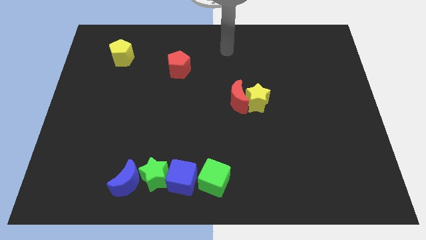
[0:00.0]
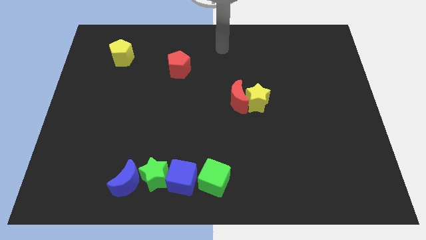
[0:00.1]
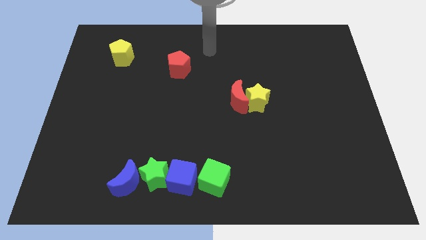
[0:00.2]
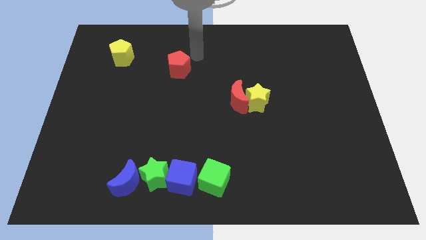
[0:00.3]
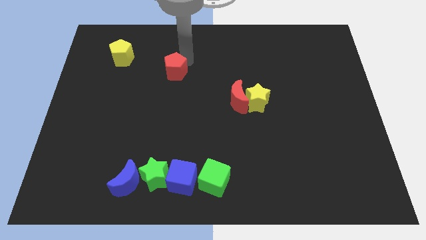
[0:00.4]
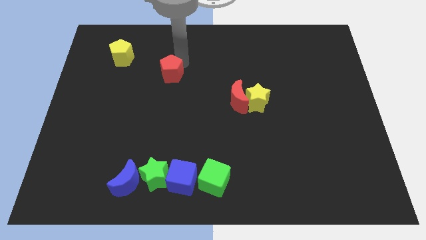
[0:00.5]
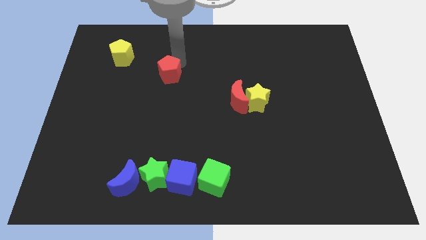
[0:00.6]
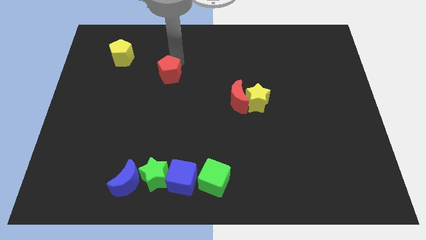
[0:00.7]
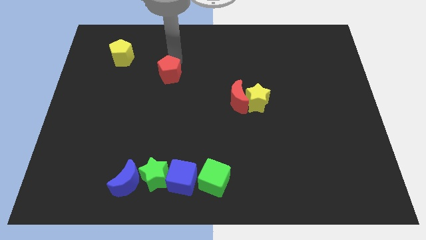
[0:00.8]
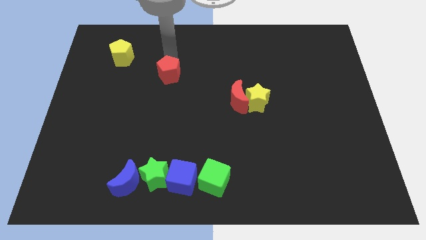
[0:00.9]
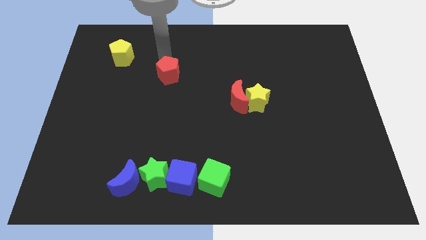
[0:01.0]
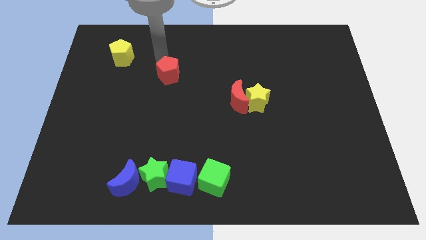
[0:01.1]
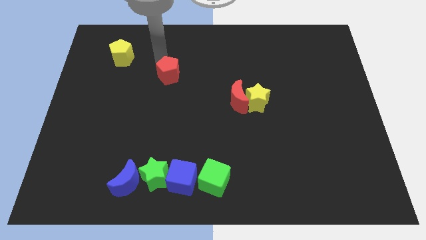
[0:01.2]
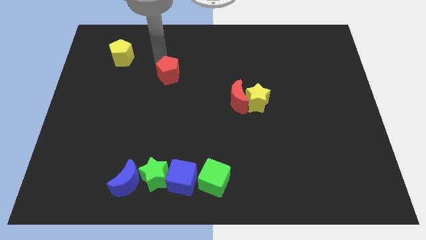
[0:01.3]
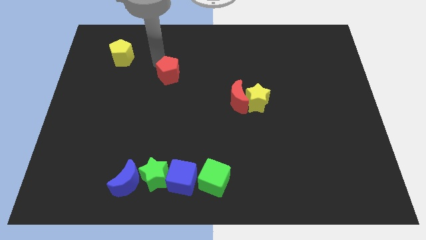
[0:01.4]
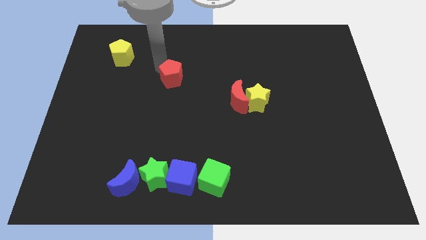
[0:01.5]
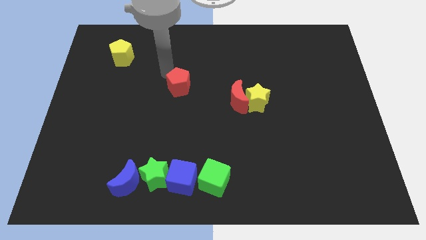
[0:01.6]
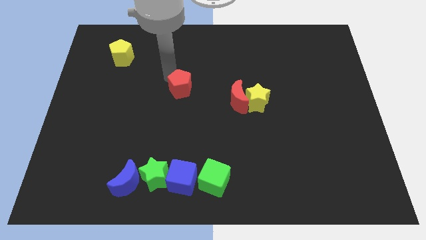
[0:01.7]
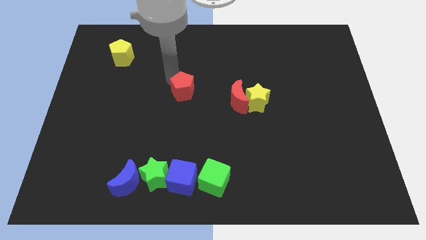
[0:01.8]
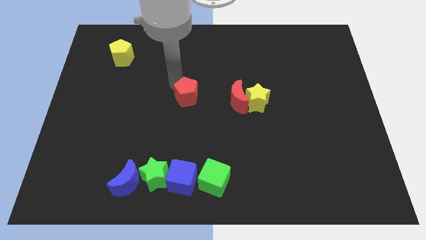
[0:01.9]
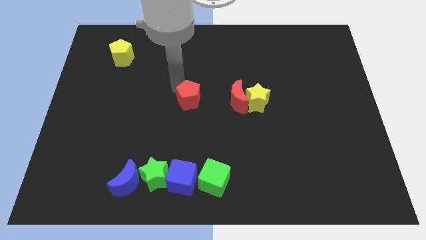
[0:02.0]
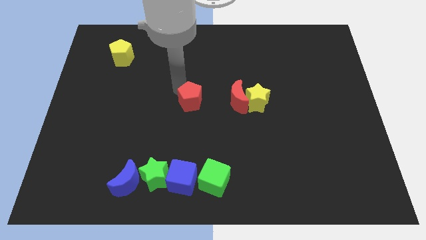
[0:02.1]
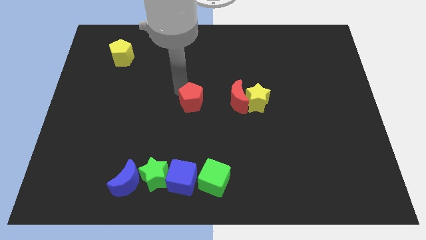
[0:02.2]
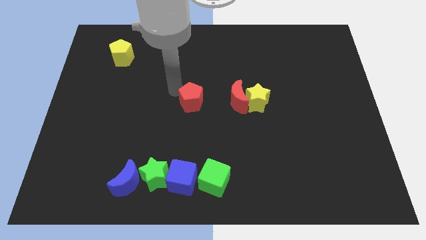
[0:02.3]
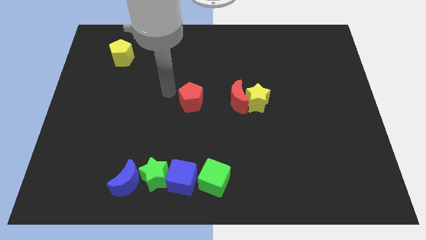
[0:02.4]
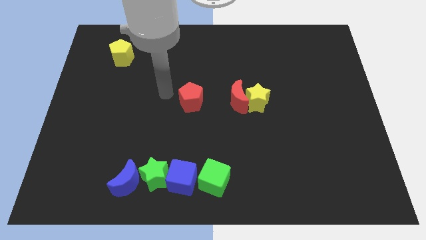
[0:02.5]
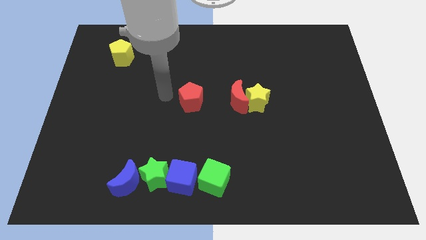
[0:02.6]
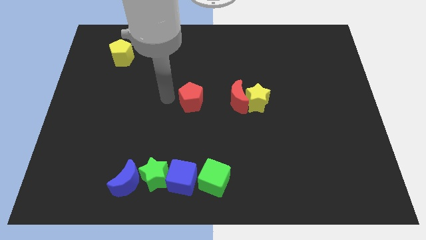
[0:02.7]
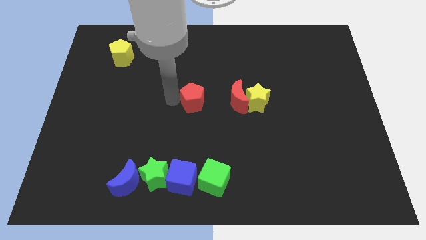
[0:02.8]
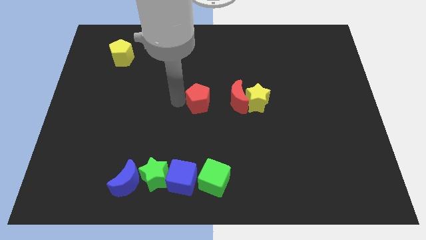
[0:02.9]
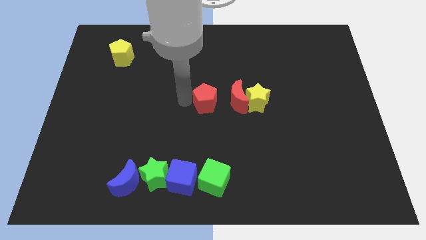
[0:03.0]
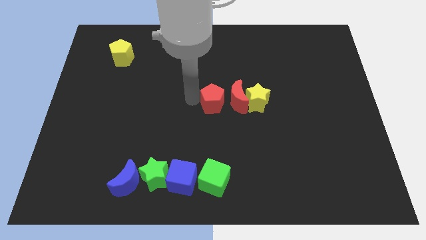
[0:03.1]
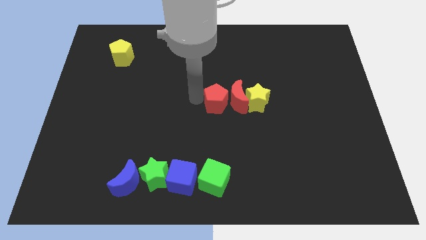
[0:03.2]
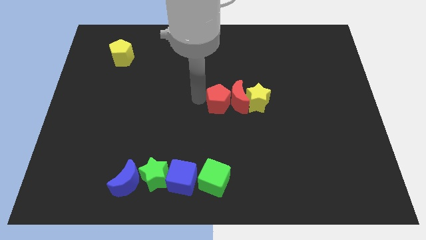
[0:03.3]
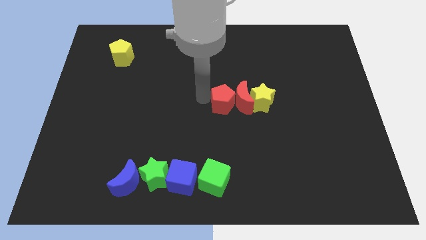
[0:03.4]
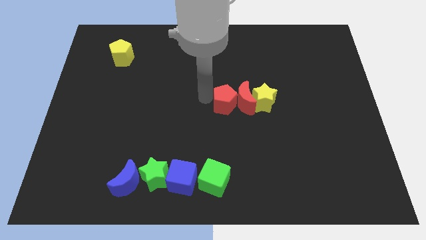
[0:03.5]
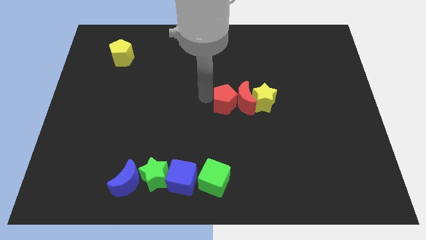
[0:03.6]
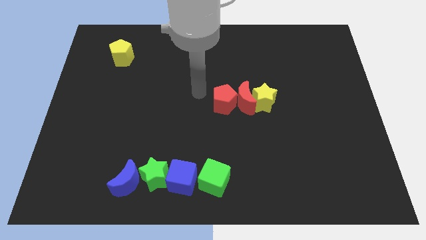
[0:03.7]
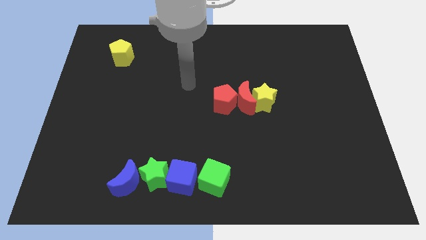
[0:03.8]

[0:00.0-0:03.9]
push the red pentagon left to the red moon

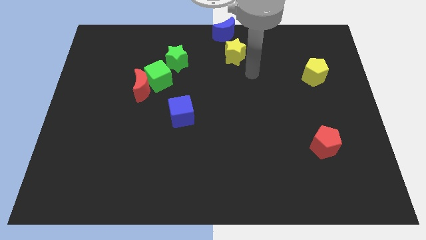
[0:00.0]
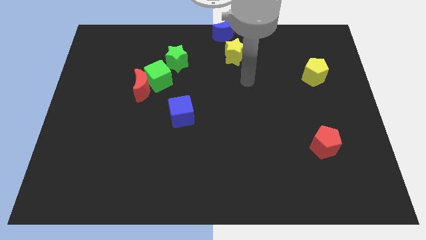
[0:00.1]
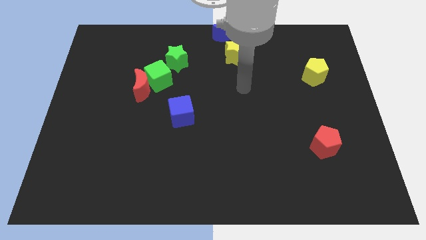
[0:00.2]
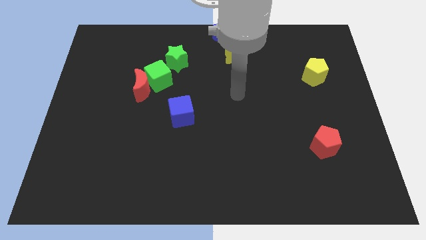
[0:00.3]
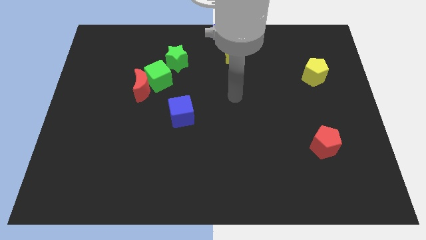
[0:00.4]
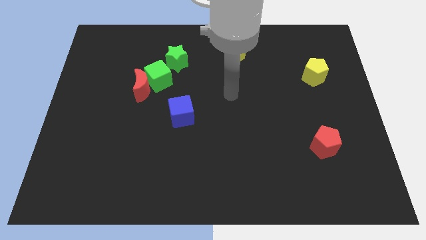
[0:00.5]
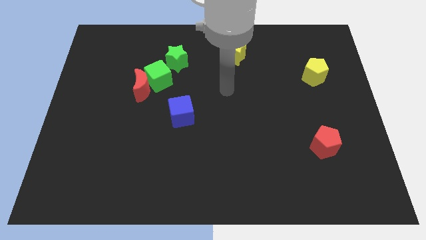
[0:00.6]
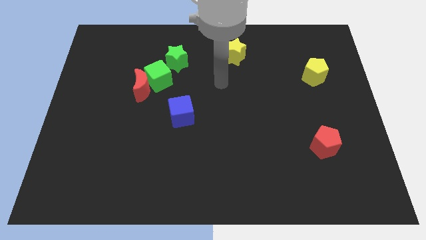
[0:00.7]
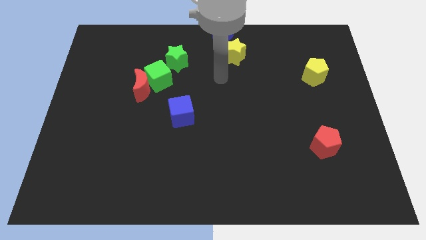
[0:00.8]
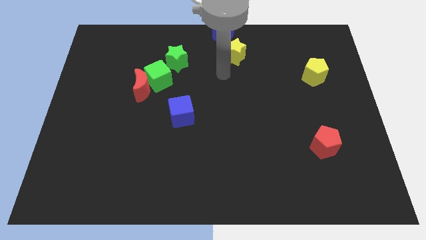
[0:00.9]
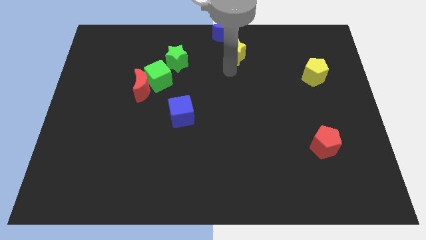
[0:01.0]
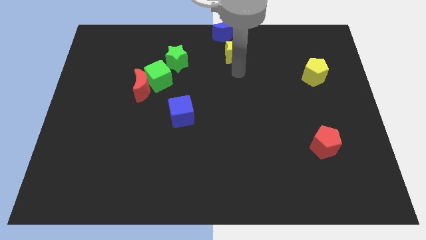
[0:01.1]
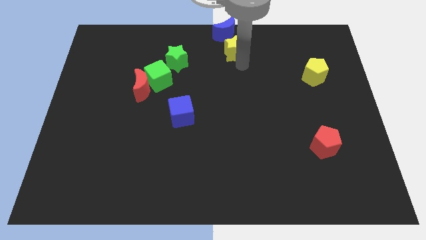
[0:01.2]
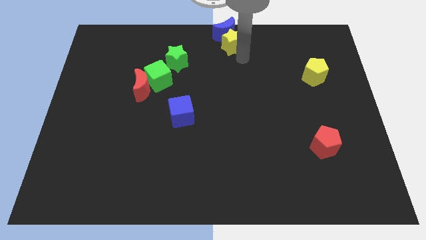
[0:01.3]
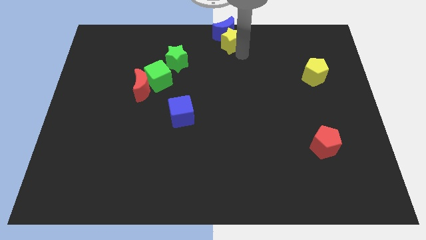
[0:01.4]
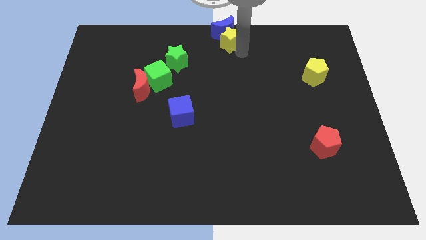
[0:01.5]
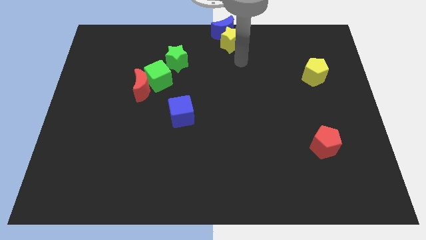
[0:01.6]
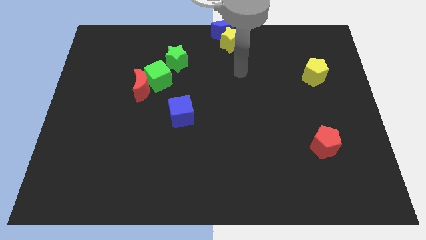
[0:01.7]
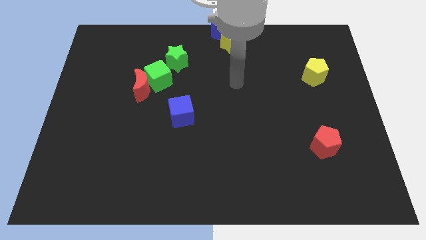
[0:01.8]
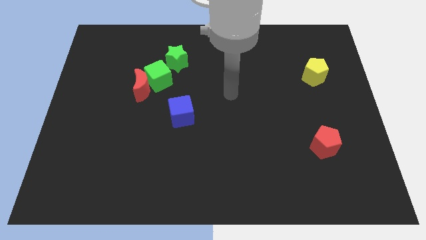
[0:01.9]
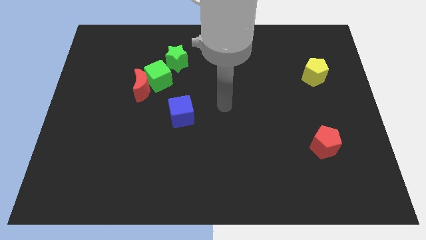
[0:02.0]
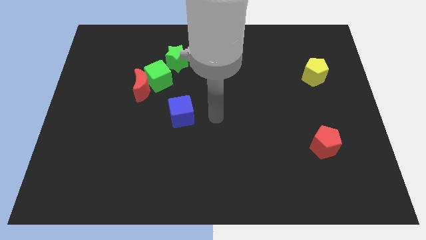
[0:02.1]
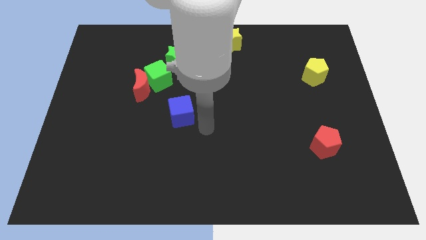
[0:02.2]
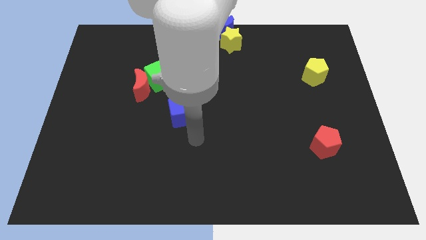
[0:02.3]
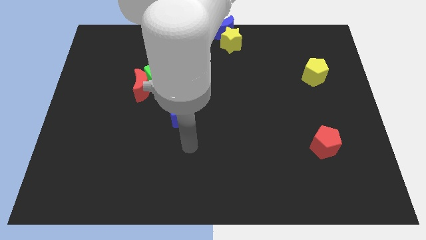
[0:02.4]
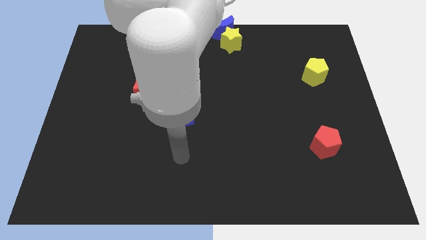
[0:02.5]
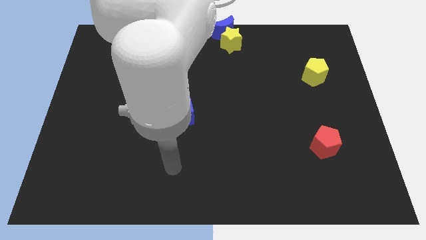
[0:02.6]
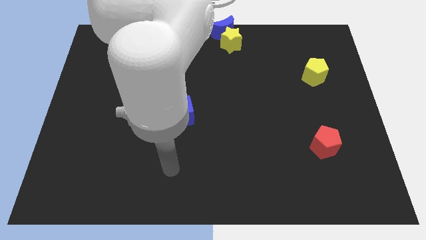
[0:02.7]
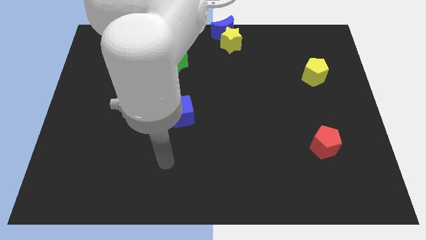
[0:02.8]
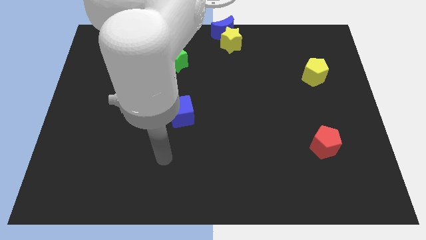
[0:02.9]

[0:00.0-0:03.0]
push the yellow star into the blue crescent towards the top center of the board

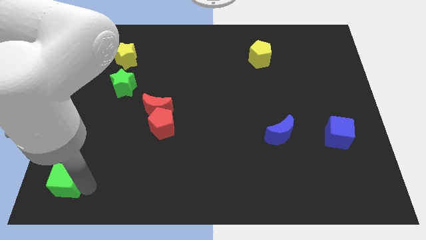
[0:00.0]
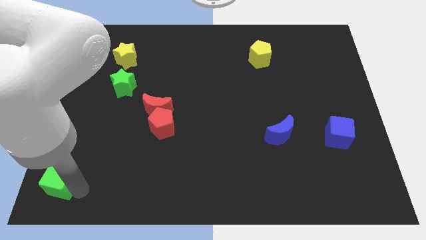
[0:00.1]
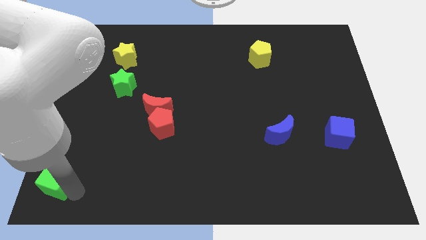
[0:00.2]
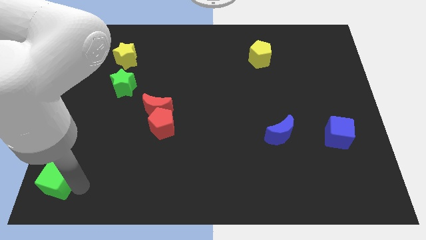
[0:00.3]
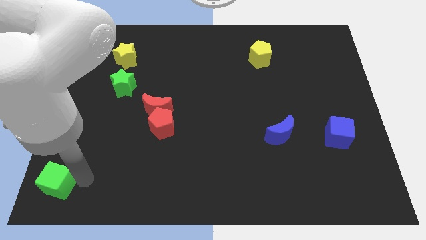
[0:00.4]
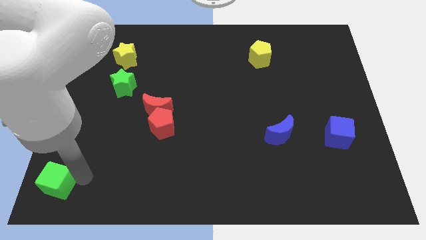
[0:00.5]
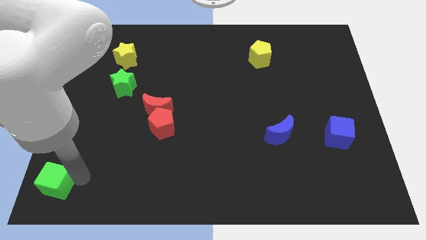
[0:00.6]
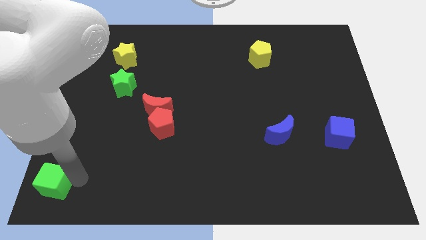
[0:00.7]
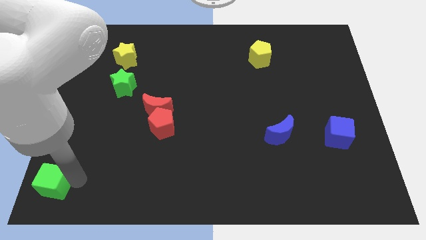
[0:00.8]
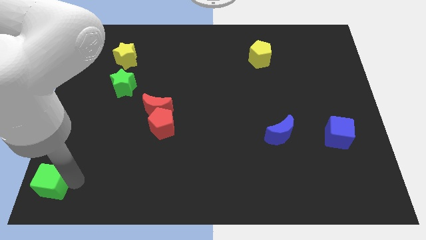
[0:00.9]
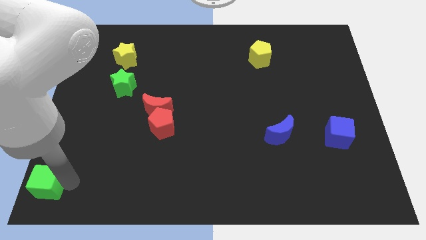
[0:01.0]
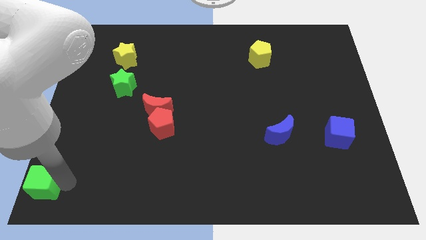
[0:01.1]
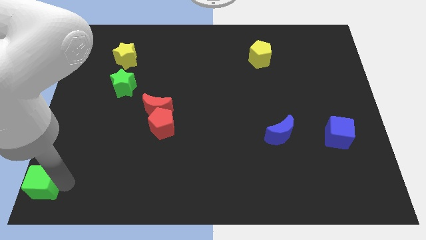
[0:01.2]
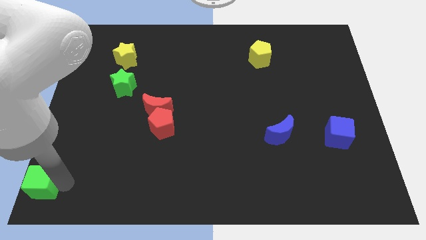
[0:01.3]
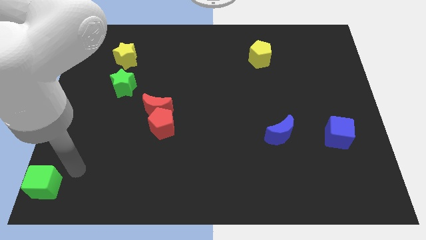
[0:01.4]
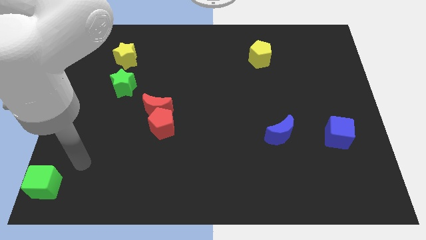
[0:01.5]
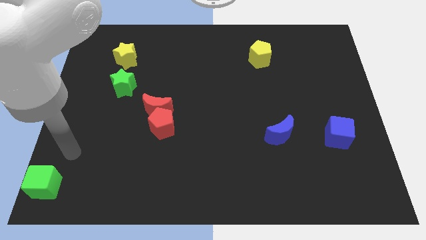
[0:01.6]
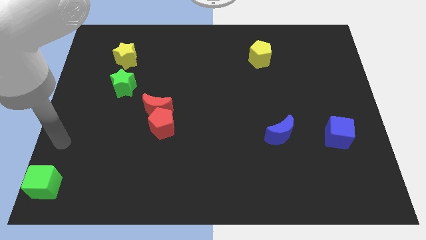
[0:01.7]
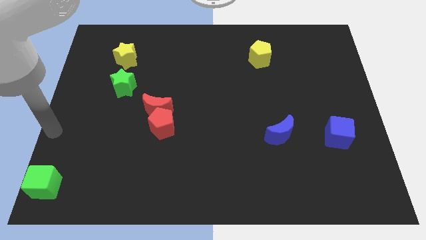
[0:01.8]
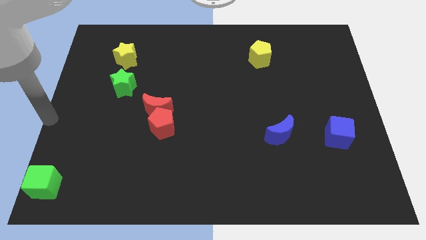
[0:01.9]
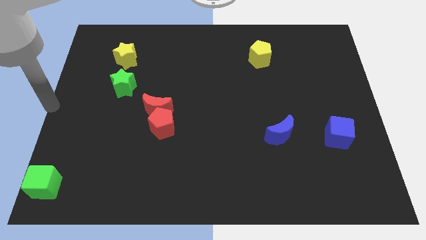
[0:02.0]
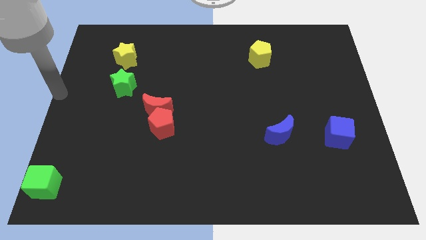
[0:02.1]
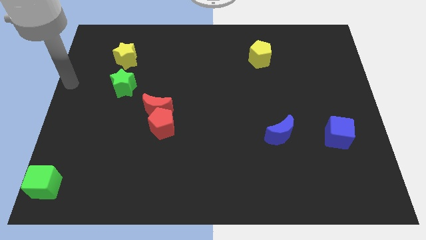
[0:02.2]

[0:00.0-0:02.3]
move the green cube to the bottom left of the board

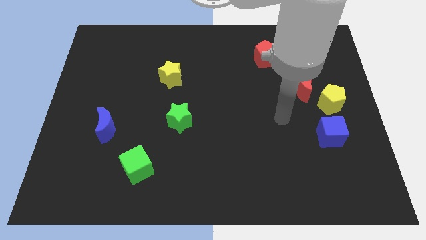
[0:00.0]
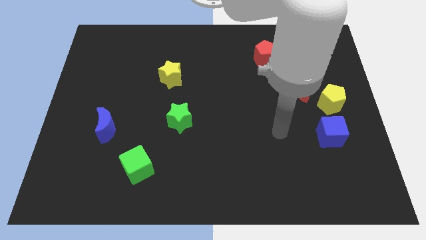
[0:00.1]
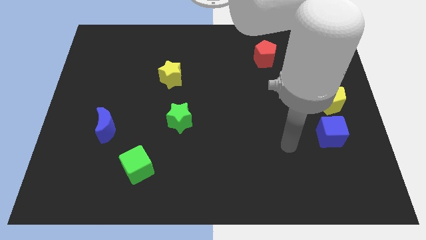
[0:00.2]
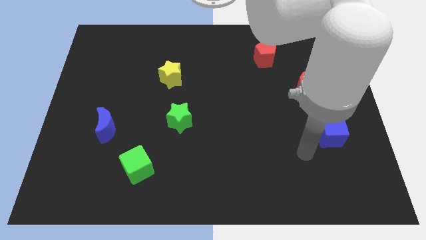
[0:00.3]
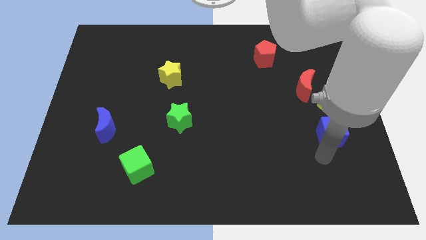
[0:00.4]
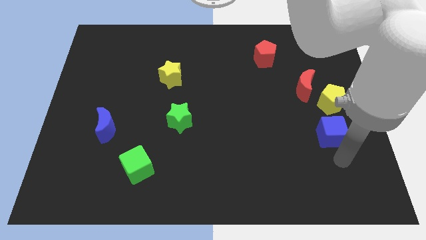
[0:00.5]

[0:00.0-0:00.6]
go near the bottom of the blue cube
